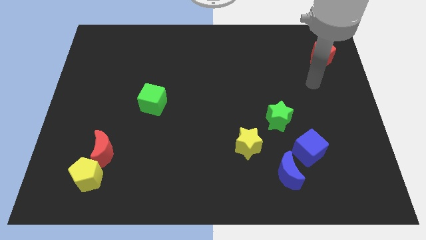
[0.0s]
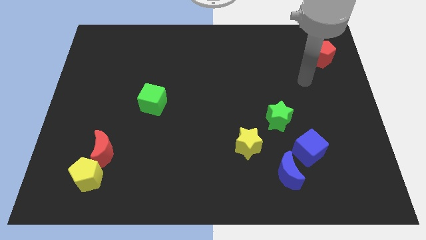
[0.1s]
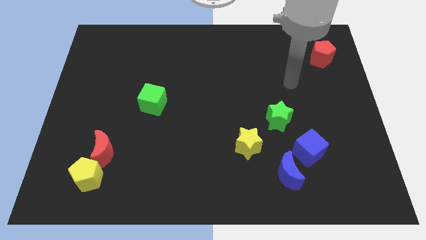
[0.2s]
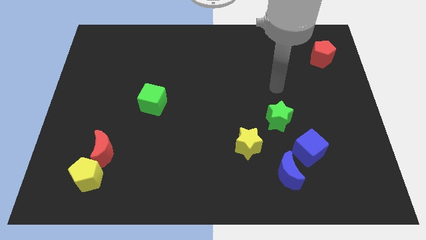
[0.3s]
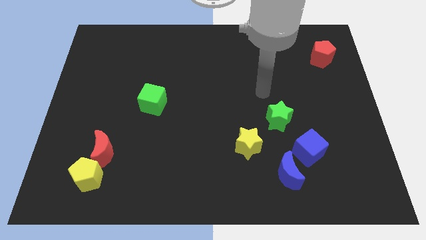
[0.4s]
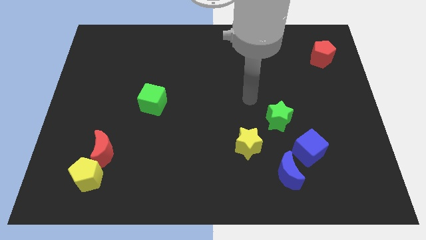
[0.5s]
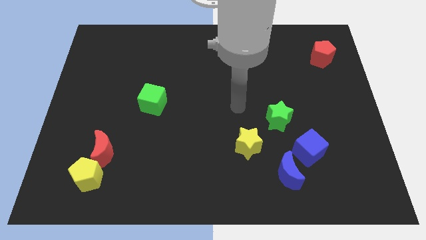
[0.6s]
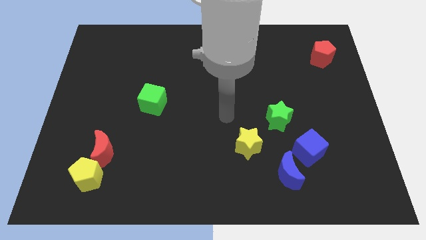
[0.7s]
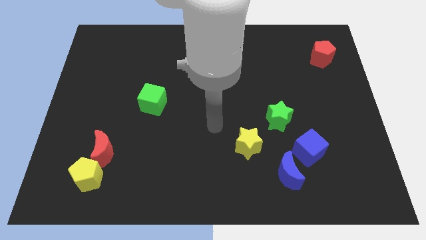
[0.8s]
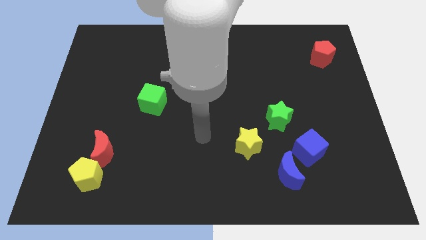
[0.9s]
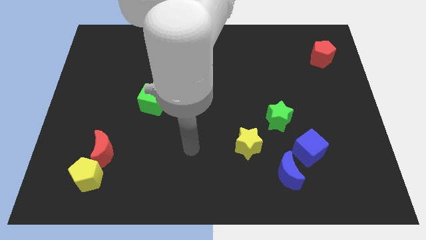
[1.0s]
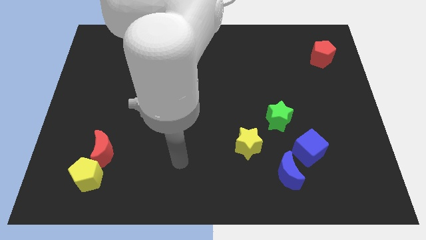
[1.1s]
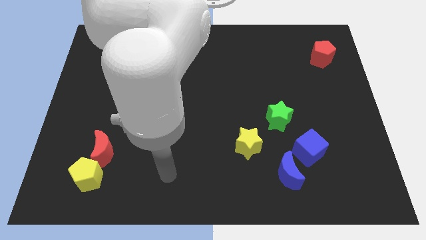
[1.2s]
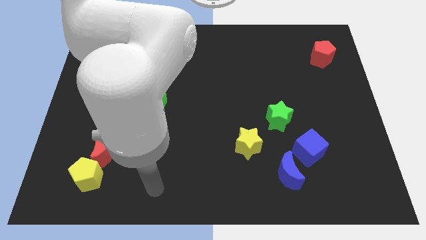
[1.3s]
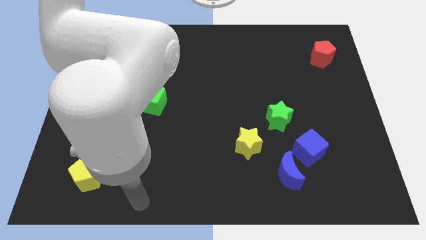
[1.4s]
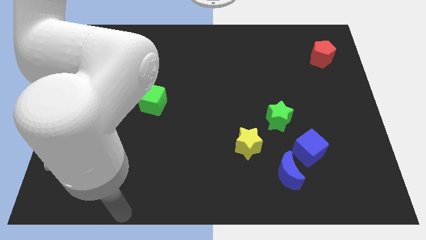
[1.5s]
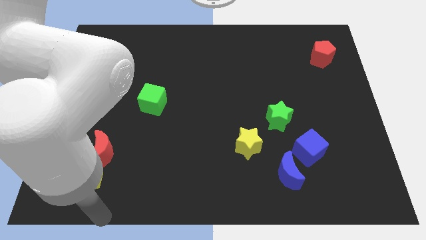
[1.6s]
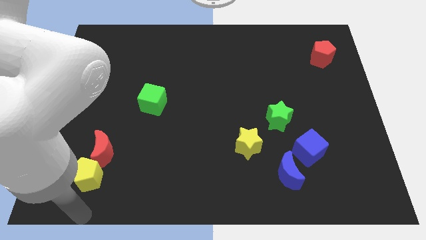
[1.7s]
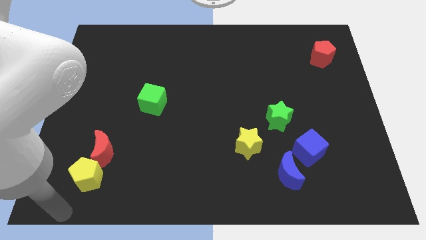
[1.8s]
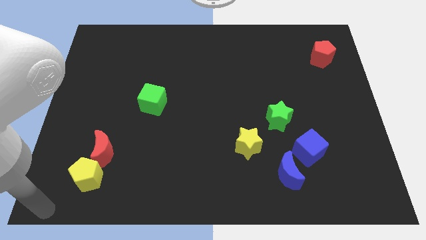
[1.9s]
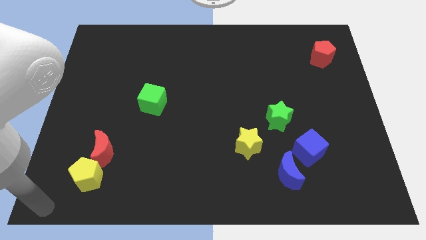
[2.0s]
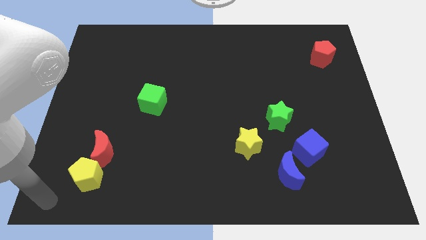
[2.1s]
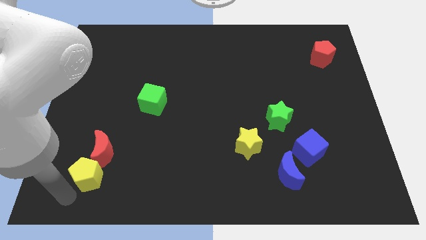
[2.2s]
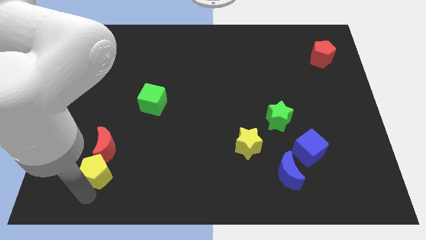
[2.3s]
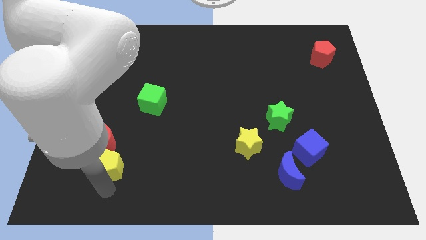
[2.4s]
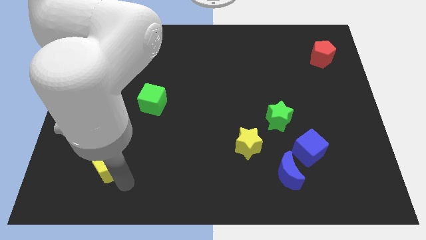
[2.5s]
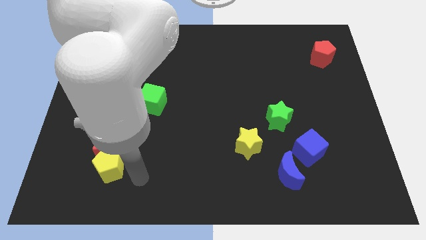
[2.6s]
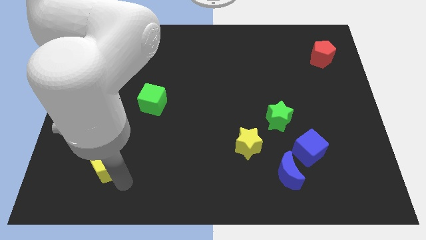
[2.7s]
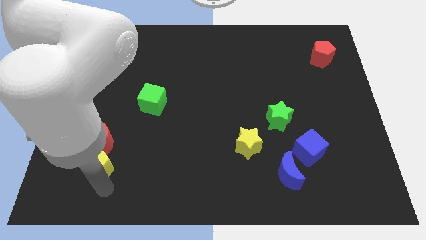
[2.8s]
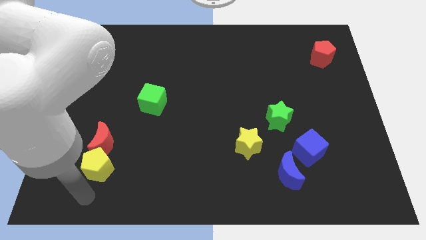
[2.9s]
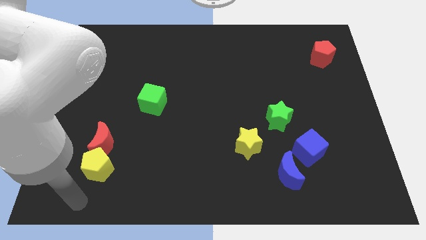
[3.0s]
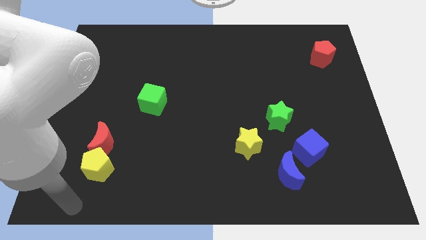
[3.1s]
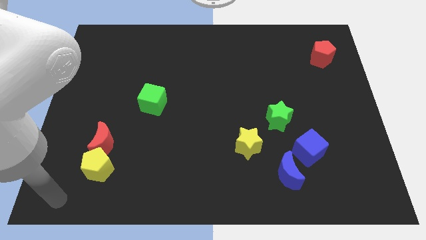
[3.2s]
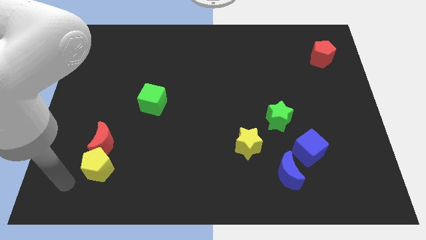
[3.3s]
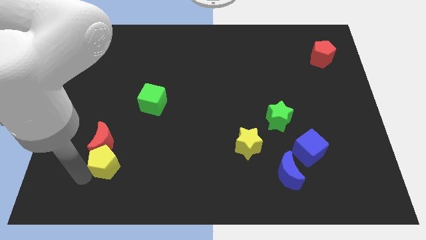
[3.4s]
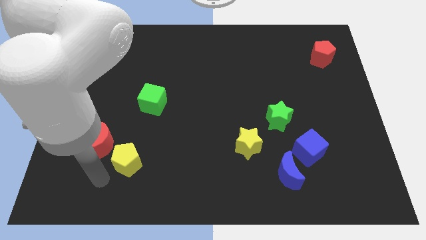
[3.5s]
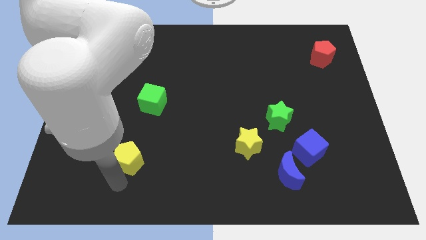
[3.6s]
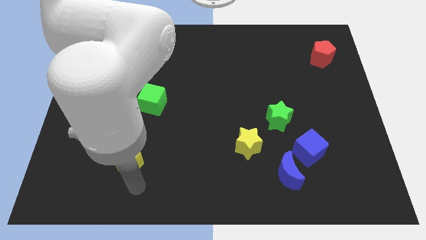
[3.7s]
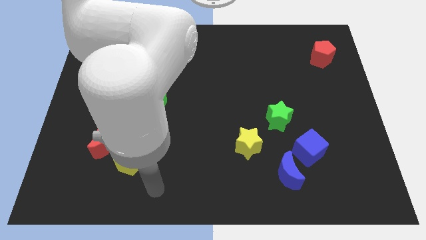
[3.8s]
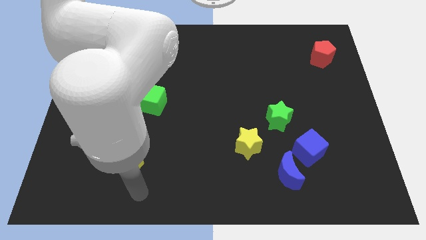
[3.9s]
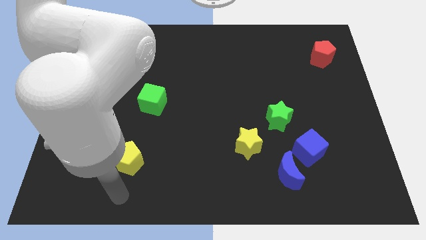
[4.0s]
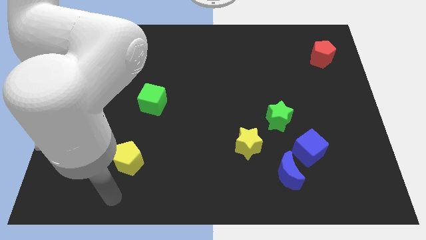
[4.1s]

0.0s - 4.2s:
separate the yellow pentagon from red moon

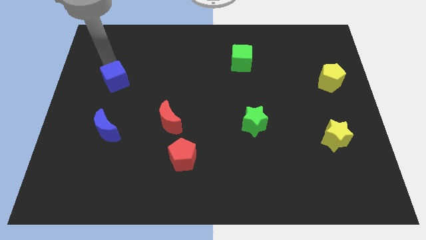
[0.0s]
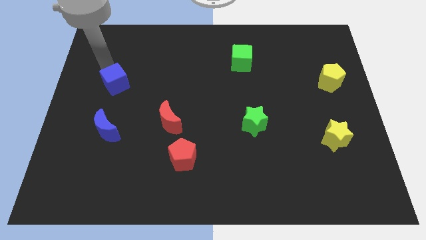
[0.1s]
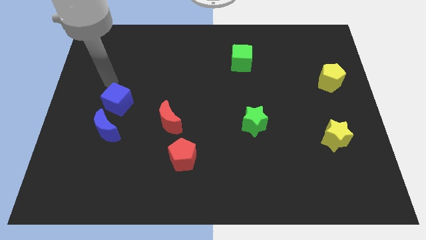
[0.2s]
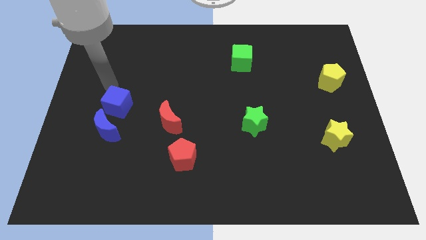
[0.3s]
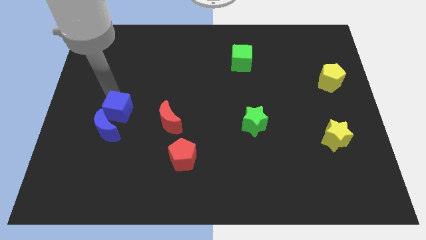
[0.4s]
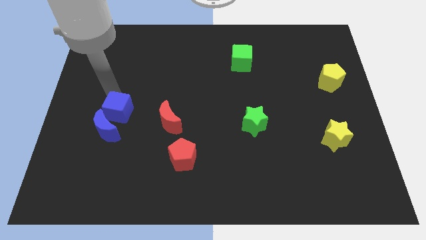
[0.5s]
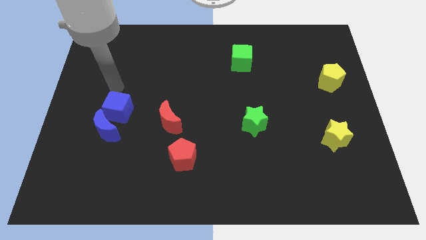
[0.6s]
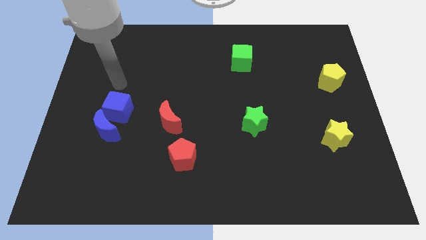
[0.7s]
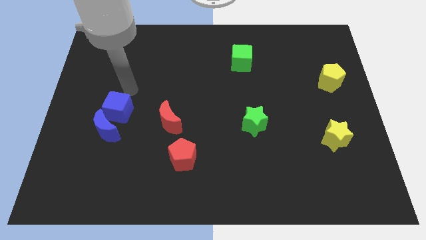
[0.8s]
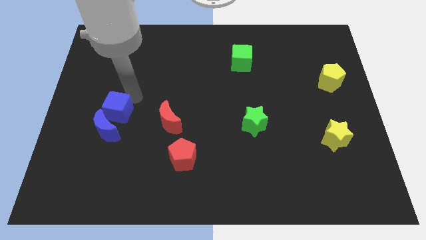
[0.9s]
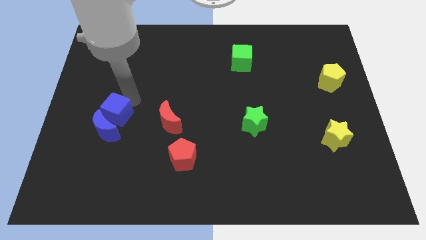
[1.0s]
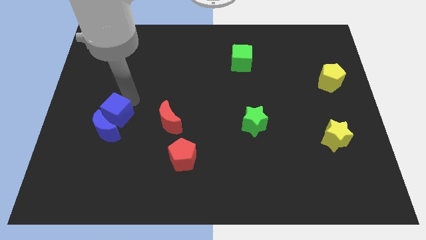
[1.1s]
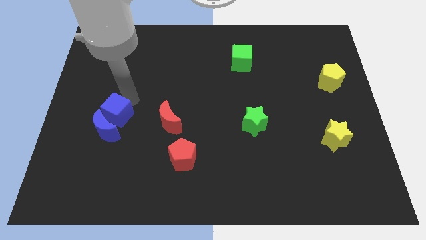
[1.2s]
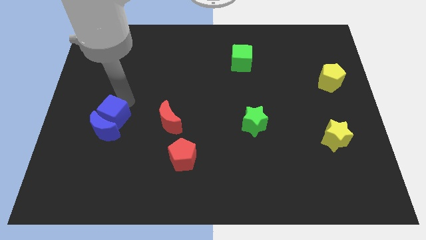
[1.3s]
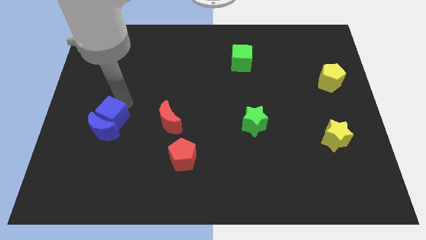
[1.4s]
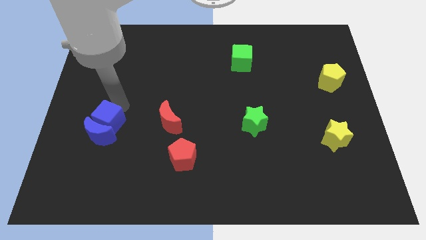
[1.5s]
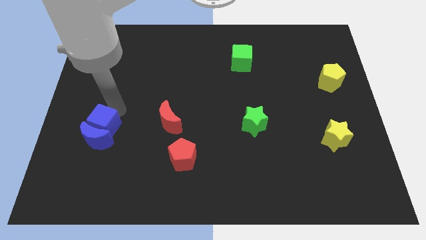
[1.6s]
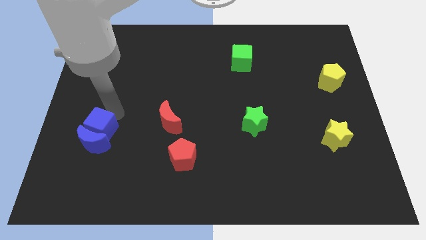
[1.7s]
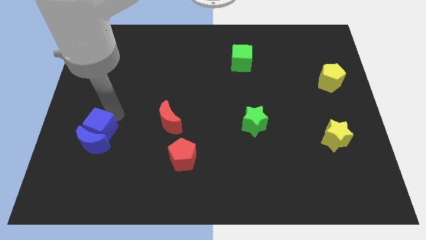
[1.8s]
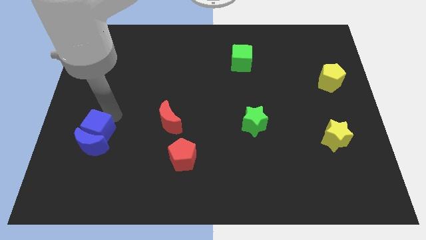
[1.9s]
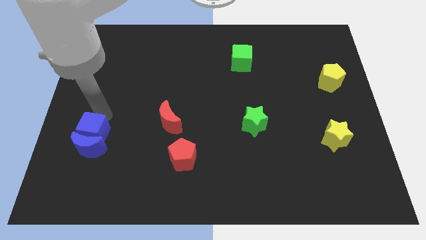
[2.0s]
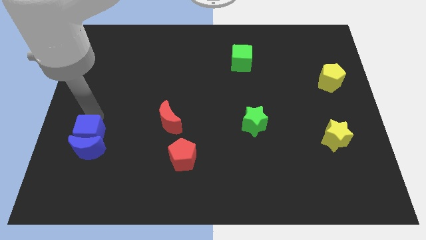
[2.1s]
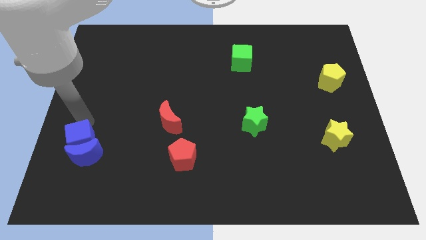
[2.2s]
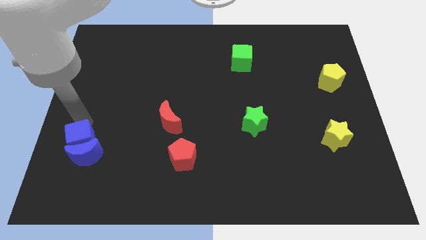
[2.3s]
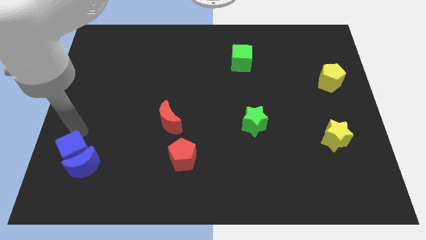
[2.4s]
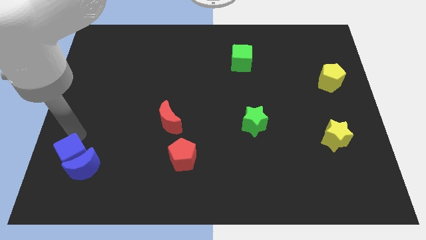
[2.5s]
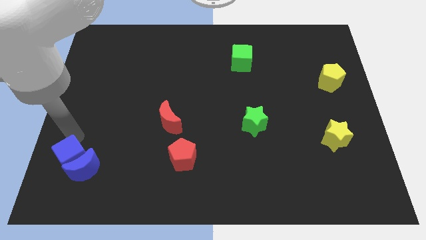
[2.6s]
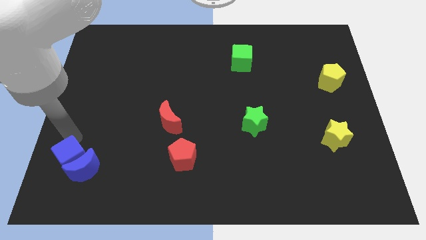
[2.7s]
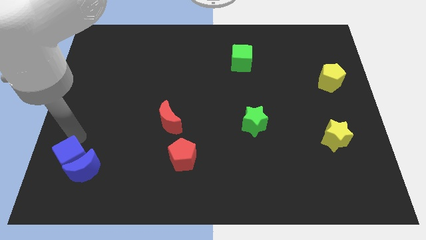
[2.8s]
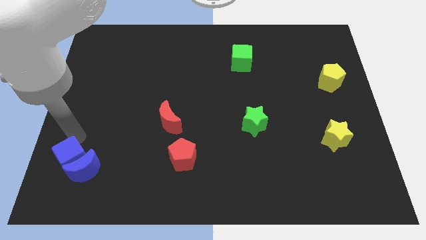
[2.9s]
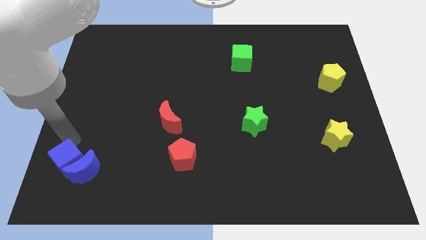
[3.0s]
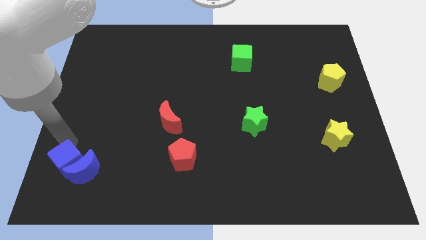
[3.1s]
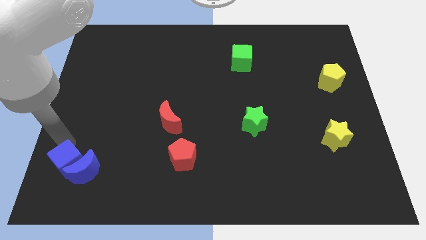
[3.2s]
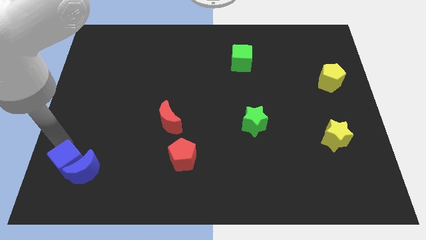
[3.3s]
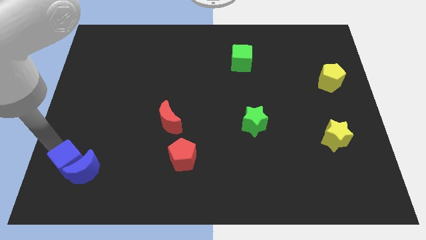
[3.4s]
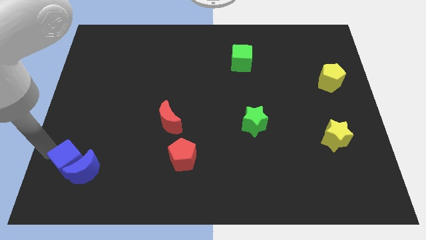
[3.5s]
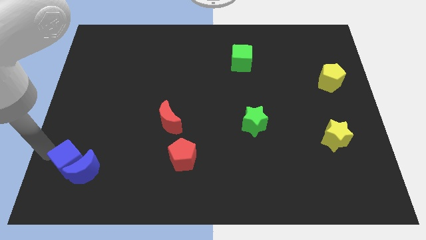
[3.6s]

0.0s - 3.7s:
push the blue moon and blue cube towards the bottom

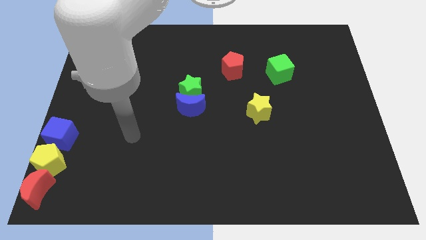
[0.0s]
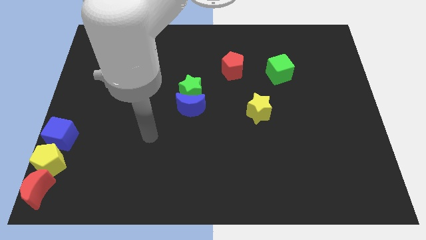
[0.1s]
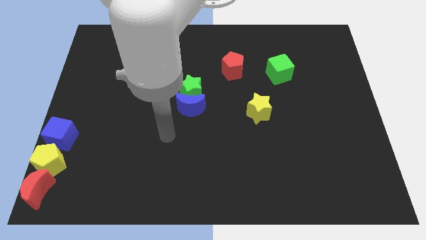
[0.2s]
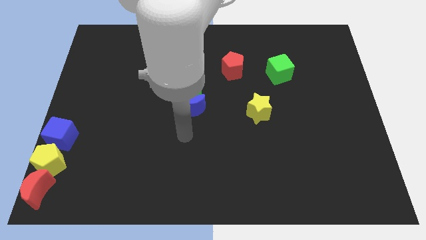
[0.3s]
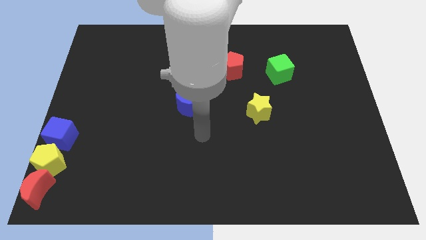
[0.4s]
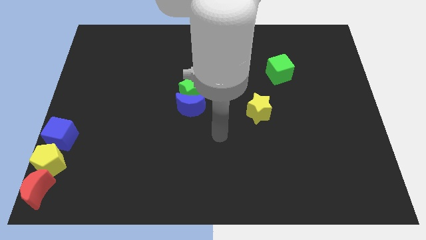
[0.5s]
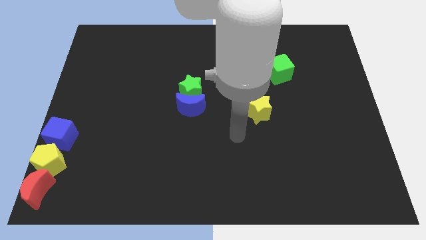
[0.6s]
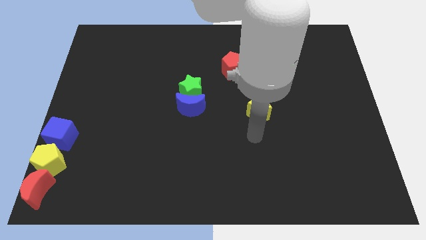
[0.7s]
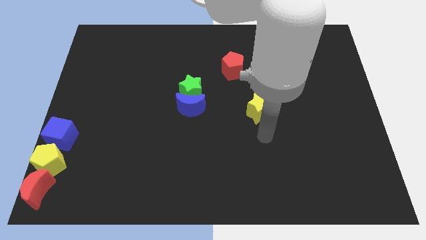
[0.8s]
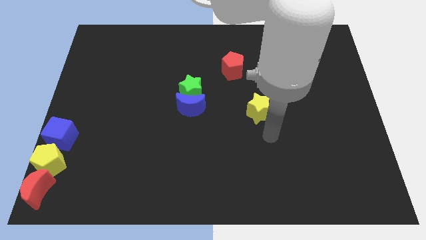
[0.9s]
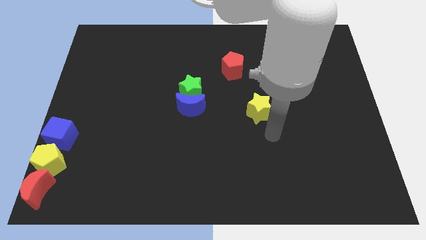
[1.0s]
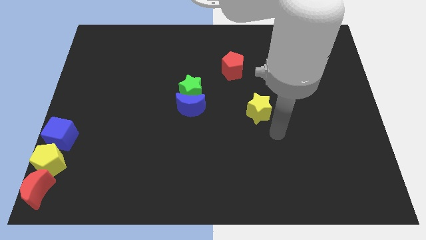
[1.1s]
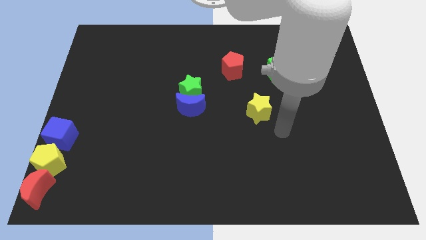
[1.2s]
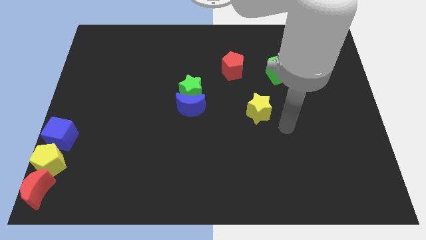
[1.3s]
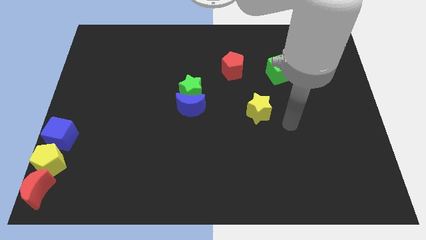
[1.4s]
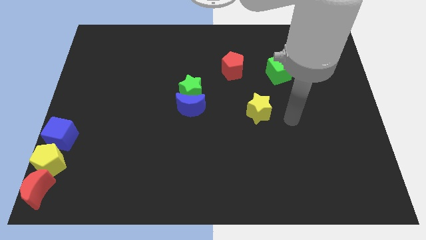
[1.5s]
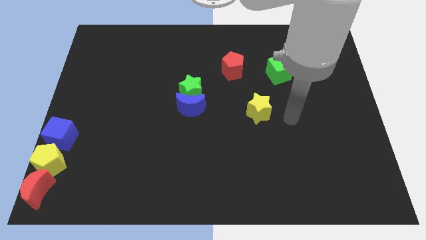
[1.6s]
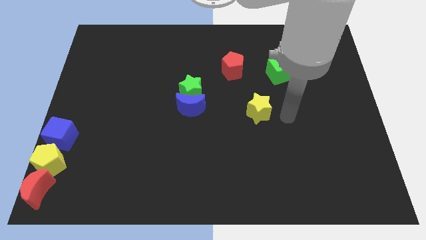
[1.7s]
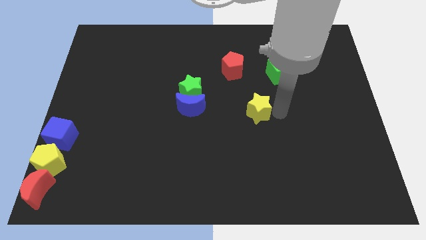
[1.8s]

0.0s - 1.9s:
place the arm right to the yellow star
